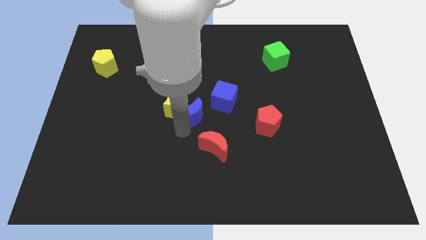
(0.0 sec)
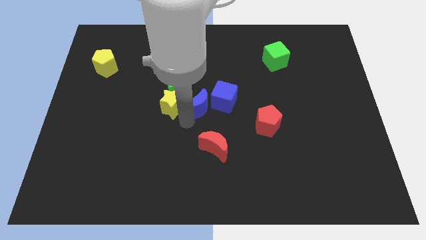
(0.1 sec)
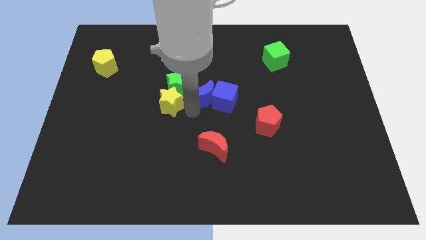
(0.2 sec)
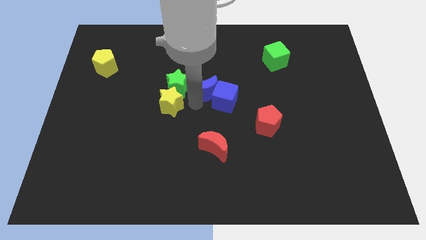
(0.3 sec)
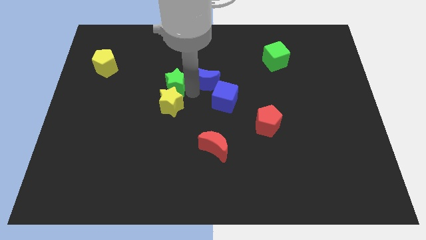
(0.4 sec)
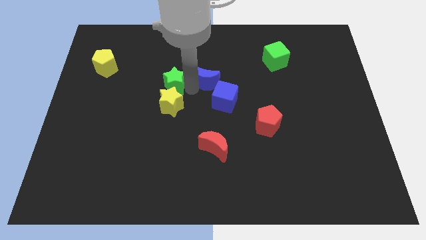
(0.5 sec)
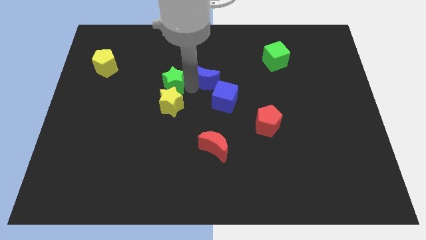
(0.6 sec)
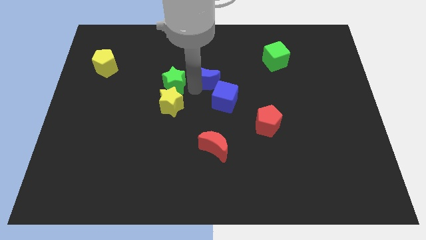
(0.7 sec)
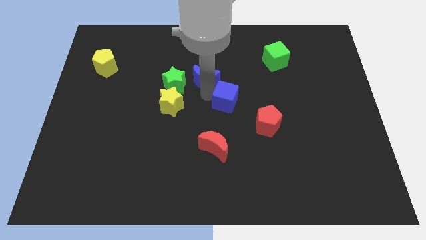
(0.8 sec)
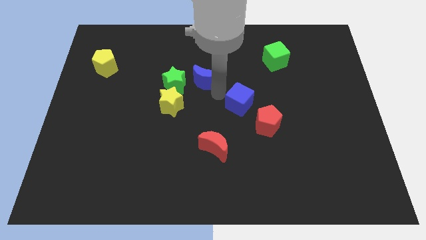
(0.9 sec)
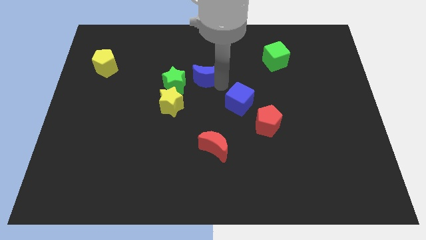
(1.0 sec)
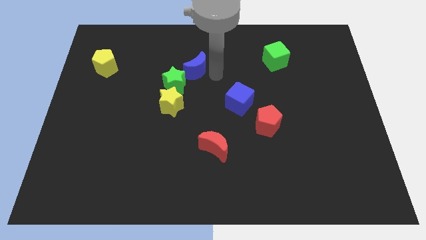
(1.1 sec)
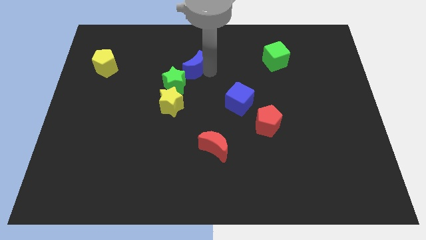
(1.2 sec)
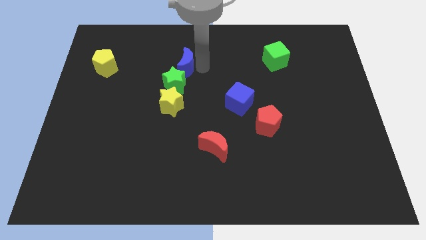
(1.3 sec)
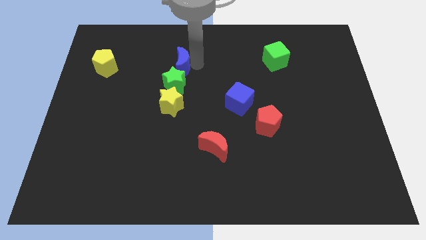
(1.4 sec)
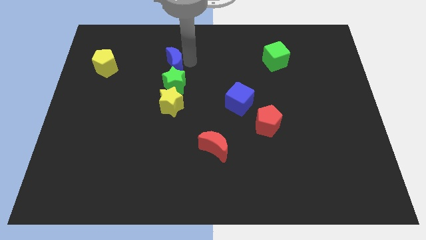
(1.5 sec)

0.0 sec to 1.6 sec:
place the blue crescent at the top of green star

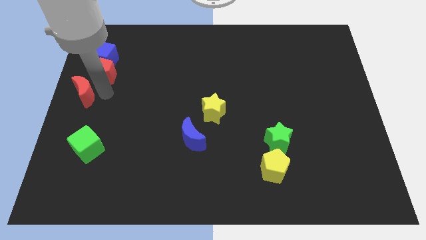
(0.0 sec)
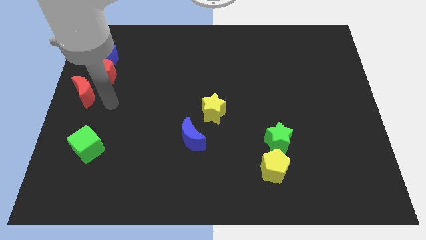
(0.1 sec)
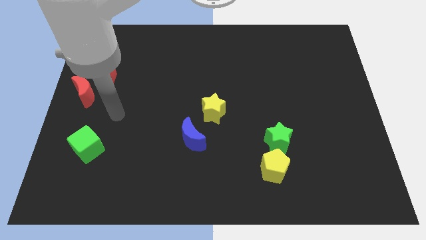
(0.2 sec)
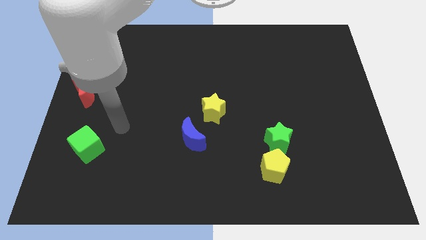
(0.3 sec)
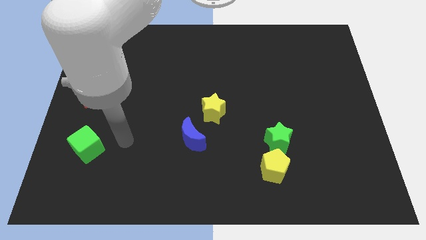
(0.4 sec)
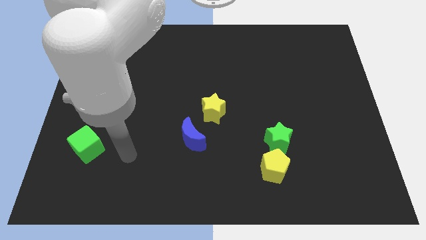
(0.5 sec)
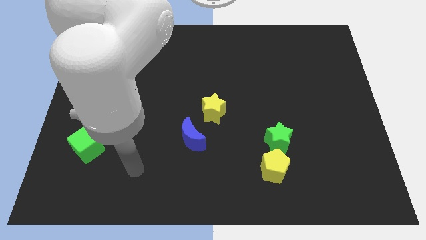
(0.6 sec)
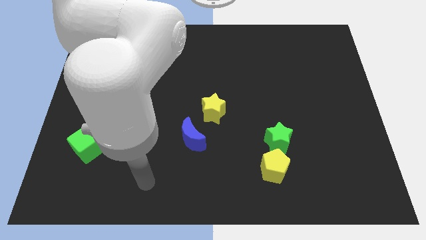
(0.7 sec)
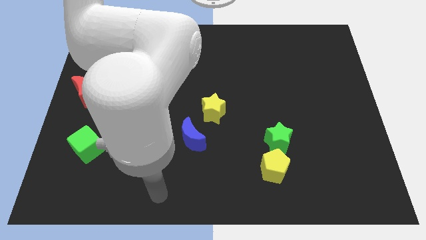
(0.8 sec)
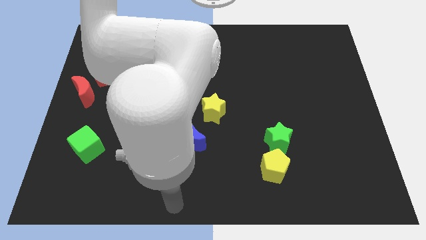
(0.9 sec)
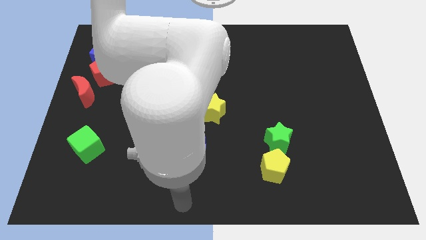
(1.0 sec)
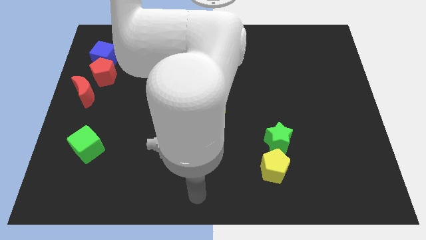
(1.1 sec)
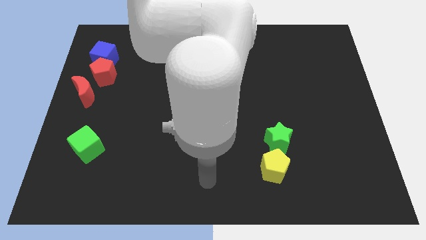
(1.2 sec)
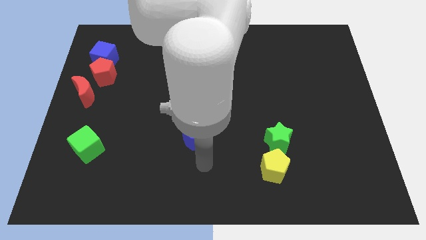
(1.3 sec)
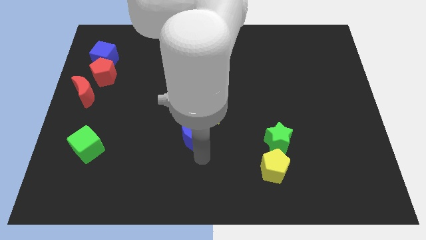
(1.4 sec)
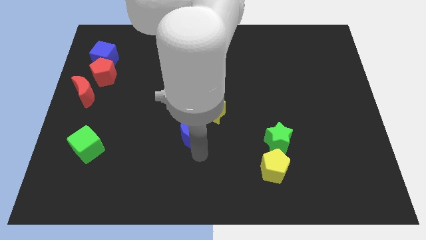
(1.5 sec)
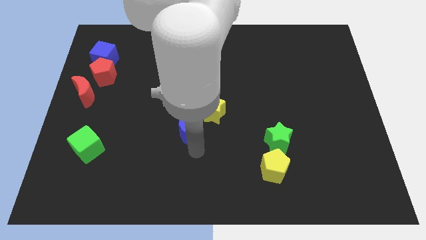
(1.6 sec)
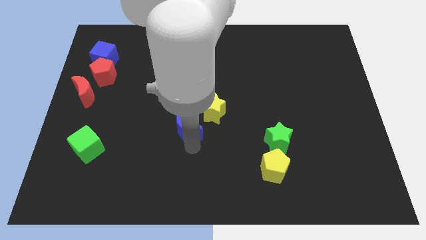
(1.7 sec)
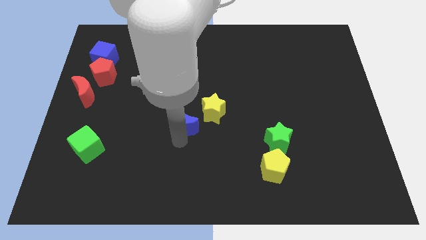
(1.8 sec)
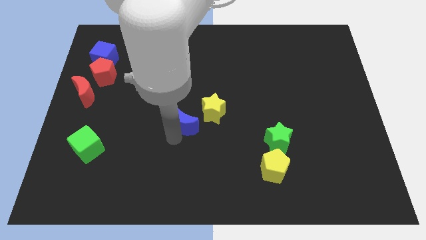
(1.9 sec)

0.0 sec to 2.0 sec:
slide the blue crescent diagonally below the bottom left side of the yellow star

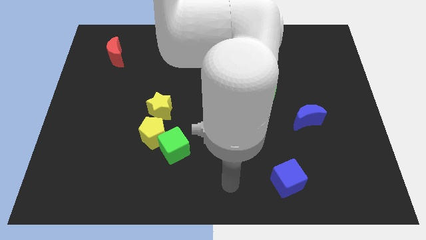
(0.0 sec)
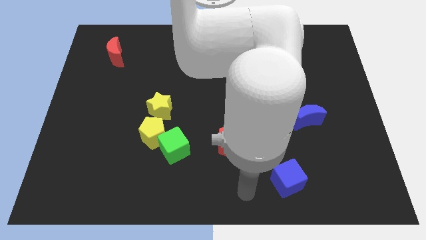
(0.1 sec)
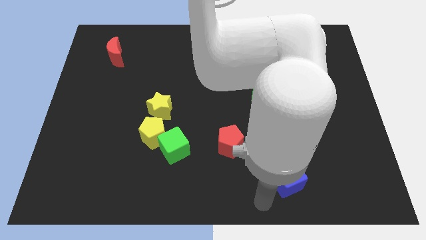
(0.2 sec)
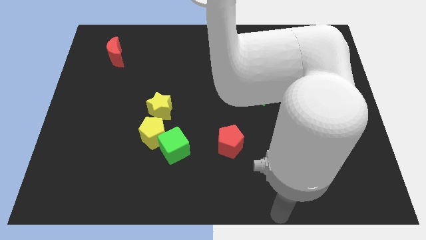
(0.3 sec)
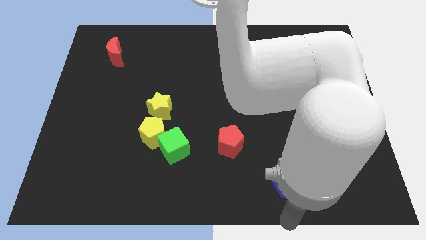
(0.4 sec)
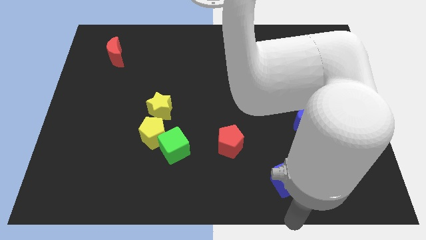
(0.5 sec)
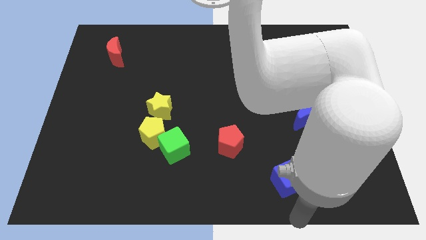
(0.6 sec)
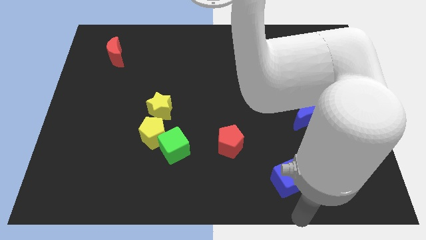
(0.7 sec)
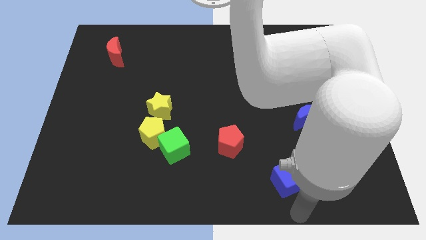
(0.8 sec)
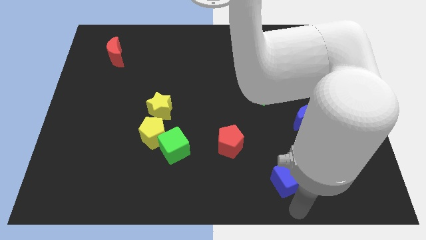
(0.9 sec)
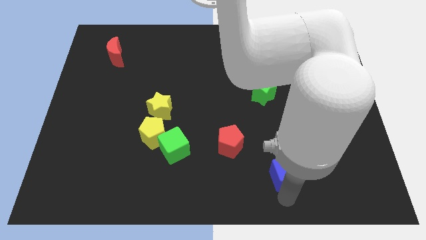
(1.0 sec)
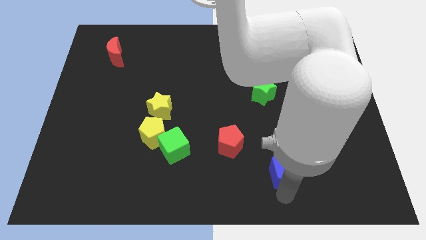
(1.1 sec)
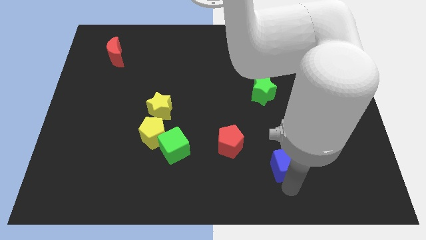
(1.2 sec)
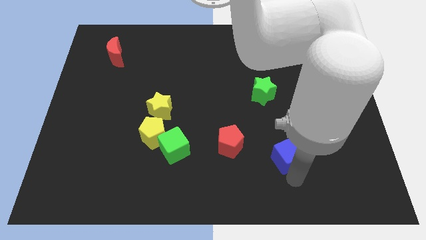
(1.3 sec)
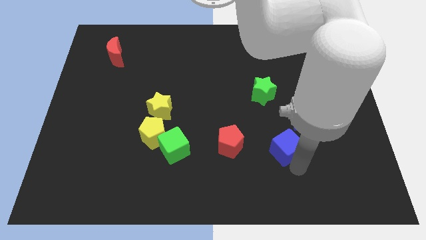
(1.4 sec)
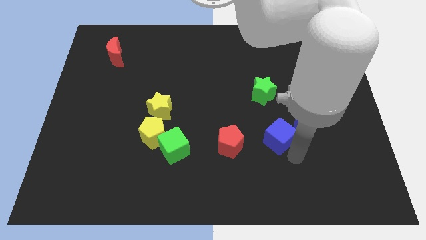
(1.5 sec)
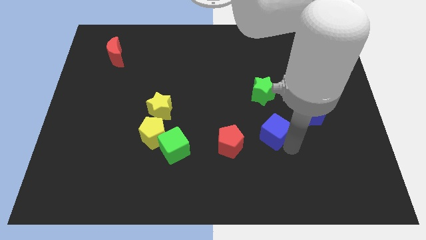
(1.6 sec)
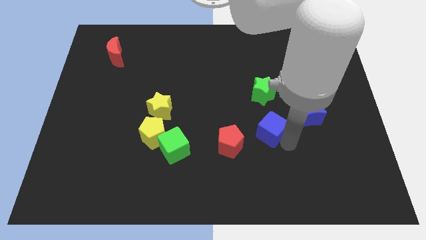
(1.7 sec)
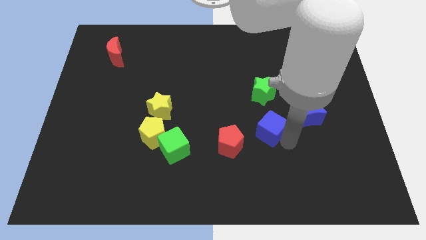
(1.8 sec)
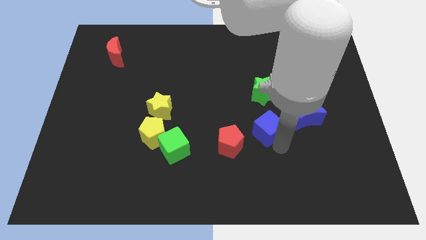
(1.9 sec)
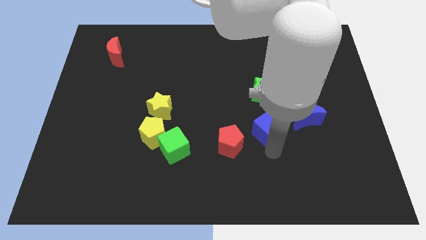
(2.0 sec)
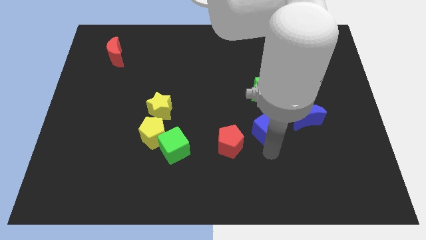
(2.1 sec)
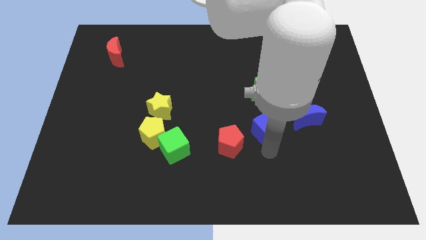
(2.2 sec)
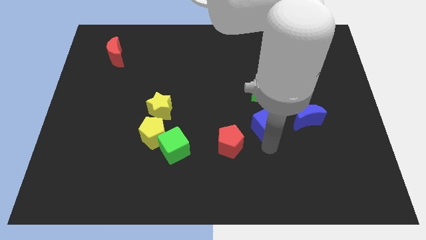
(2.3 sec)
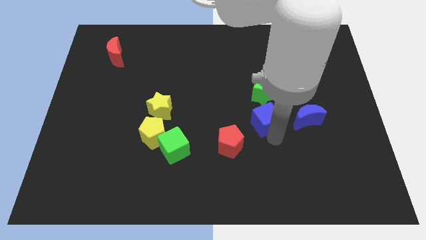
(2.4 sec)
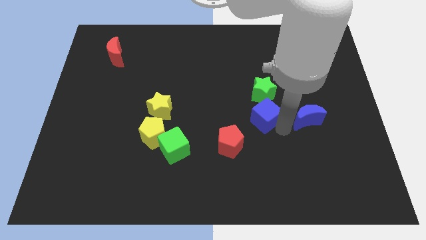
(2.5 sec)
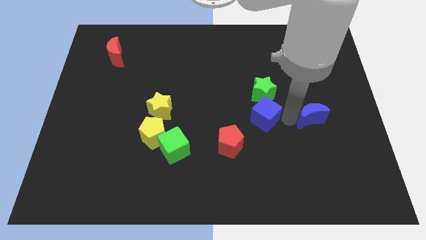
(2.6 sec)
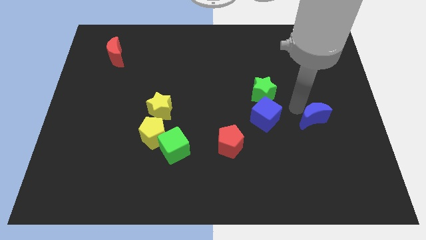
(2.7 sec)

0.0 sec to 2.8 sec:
place blue cube below green star

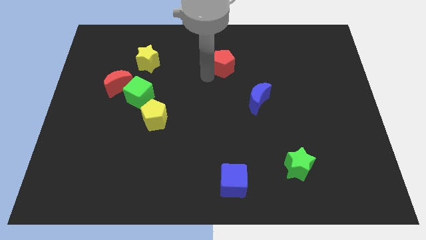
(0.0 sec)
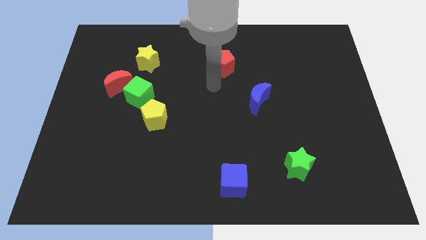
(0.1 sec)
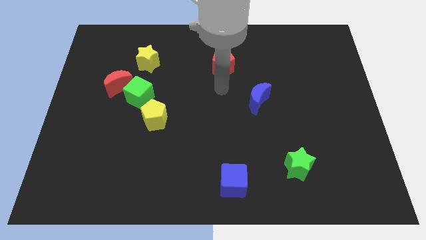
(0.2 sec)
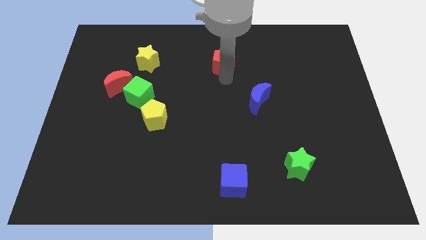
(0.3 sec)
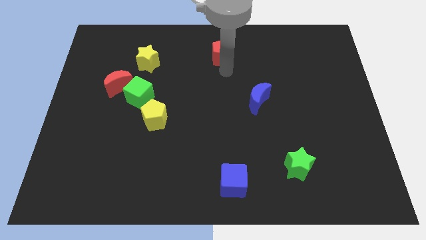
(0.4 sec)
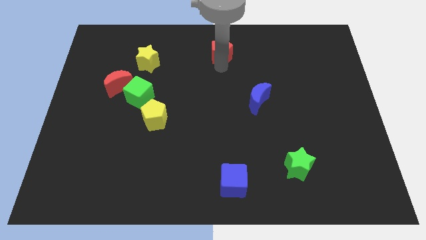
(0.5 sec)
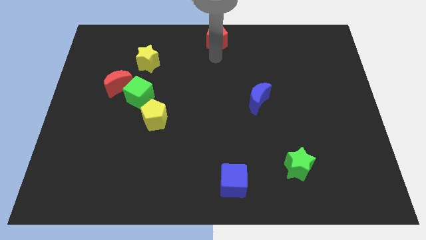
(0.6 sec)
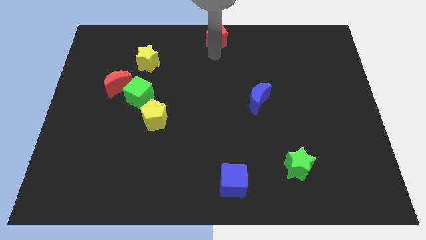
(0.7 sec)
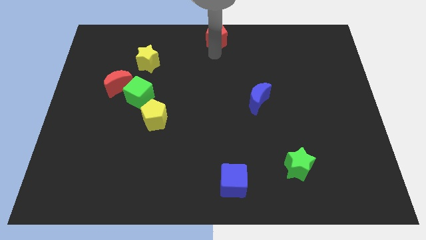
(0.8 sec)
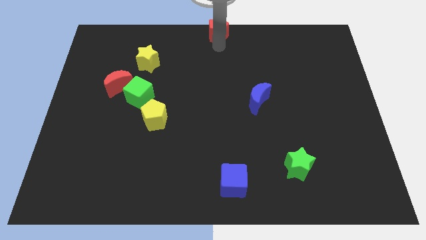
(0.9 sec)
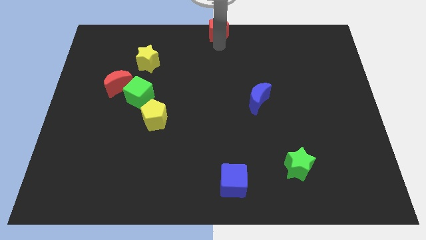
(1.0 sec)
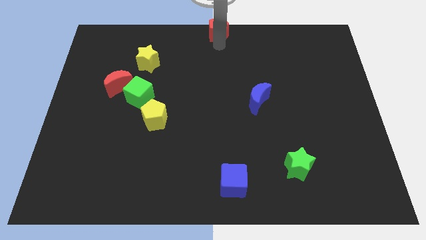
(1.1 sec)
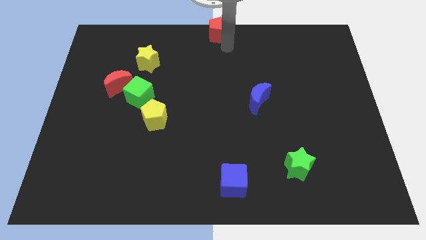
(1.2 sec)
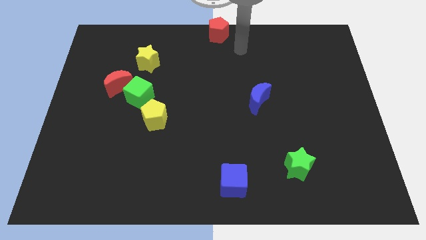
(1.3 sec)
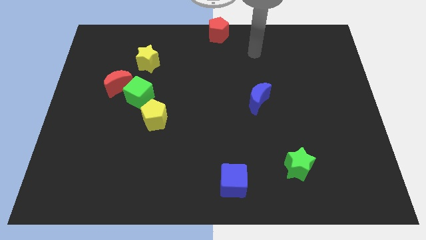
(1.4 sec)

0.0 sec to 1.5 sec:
place the red pentagon to the top center of the board

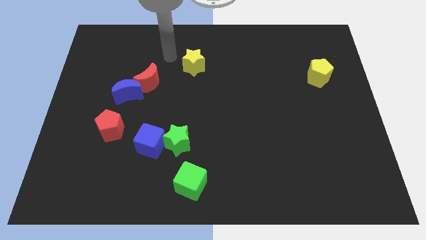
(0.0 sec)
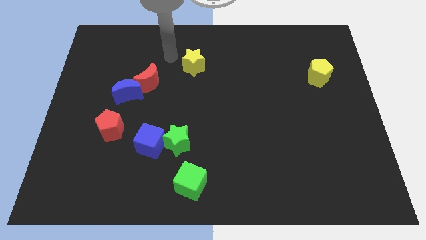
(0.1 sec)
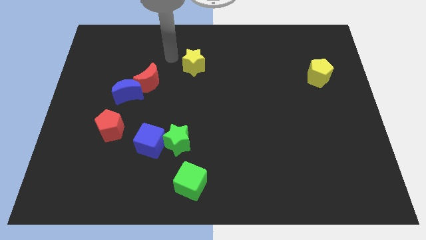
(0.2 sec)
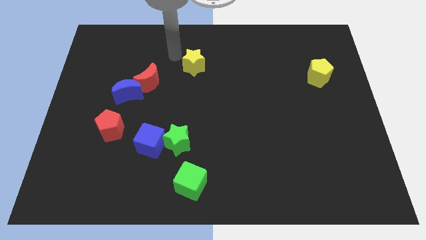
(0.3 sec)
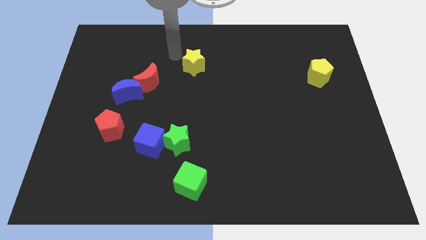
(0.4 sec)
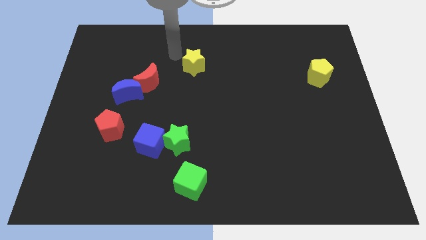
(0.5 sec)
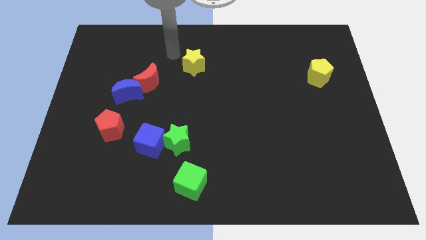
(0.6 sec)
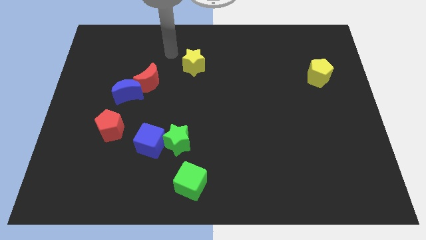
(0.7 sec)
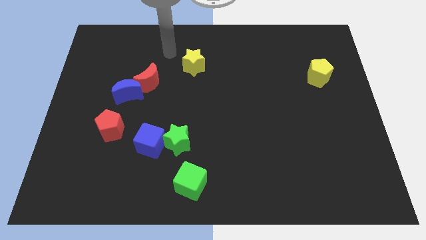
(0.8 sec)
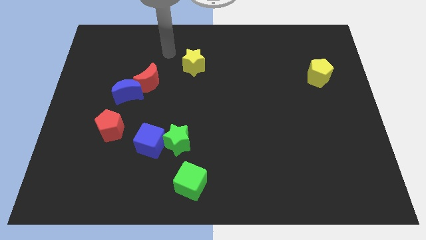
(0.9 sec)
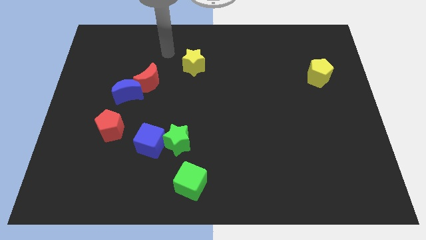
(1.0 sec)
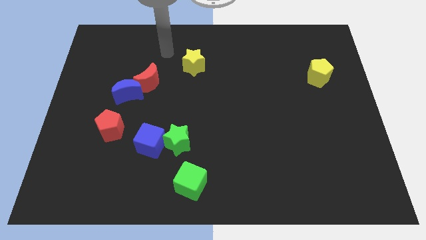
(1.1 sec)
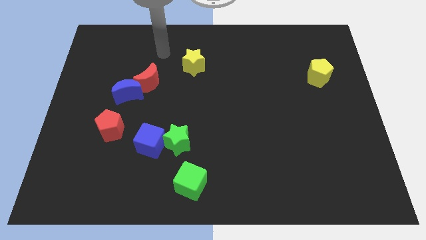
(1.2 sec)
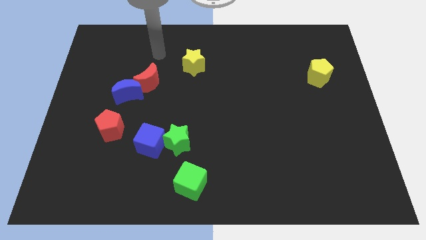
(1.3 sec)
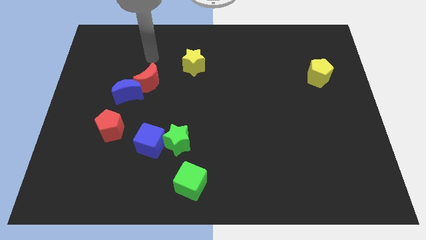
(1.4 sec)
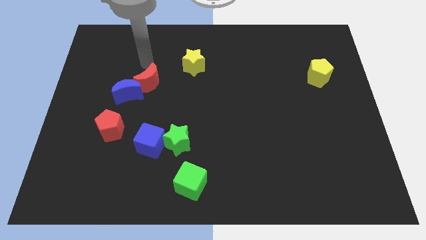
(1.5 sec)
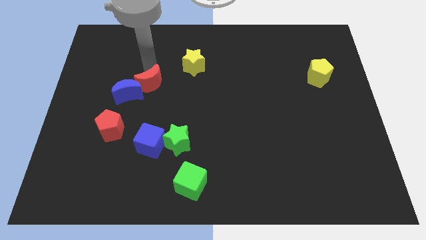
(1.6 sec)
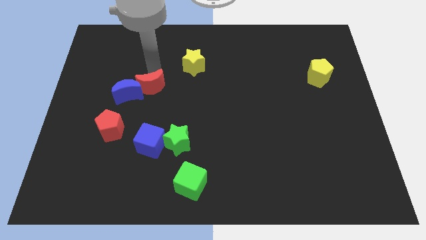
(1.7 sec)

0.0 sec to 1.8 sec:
move your arm to the top of the red crescent
